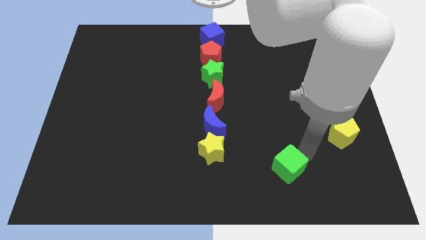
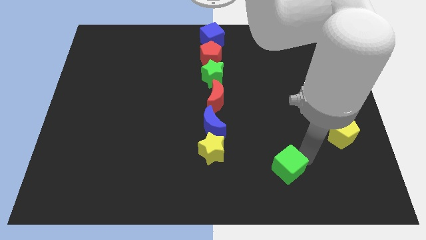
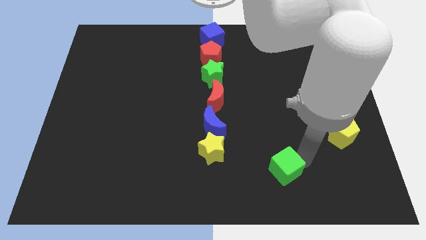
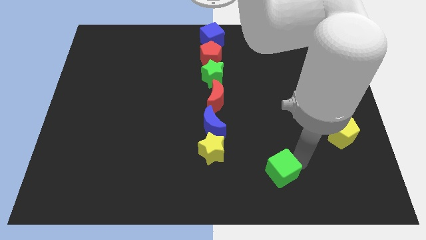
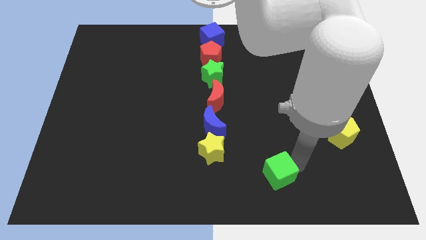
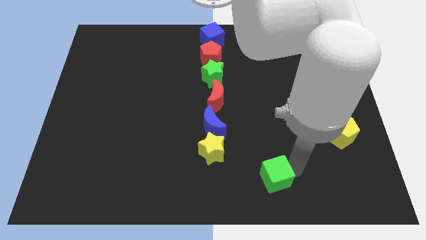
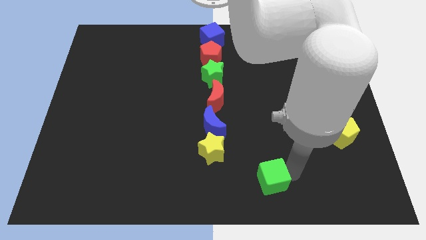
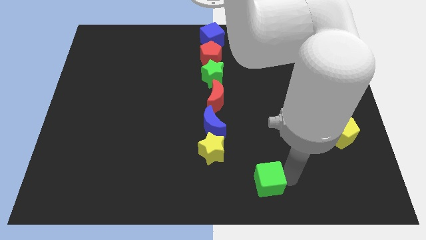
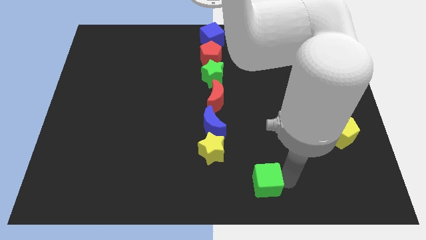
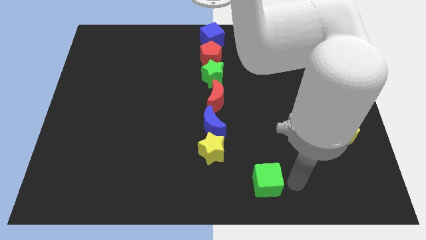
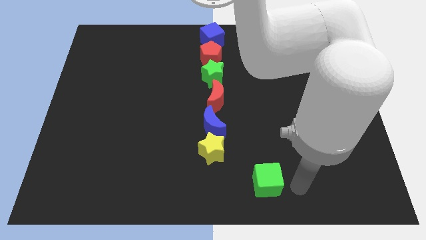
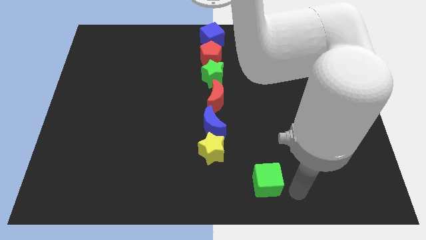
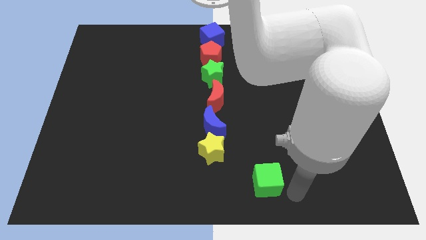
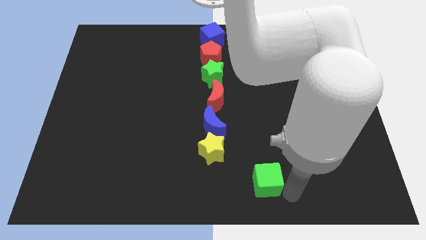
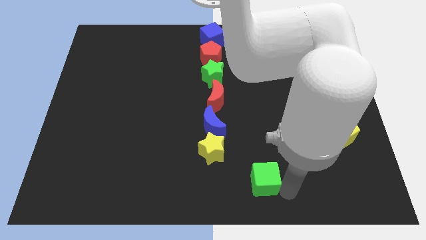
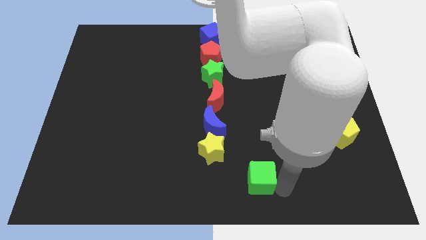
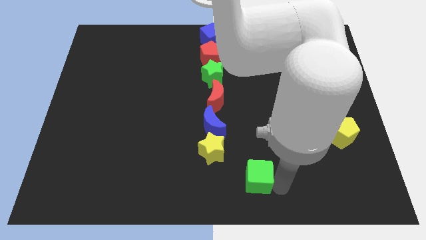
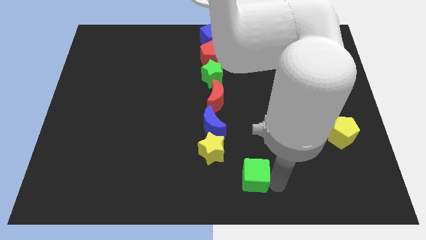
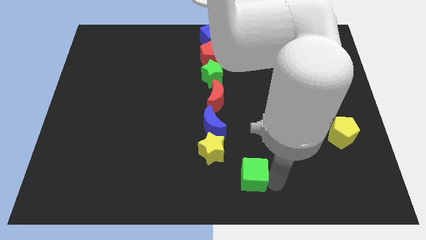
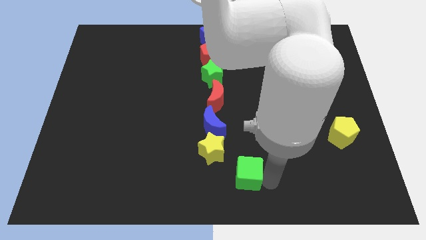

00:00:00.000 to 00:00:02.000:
push the green cube to the left

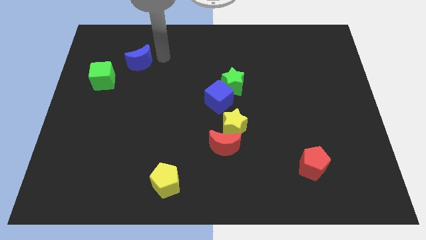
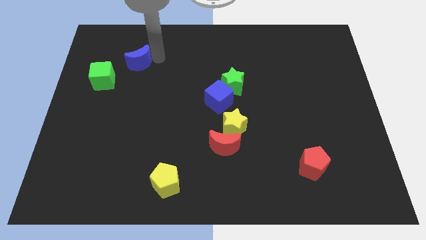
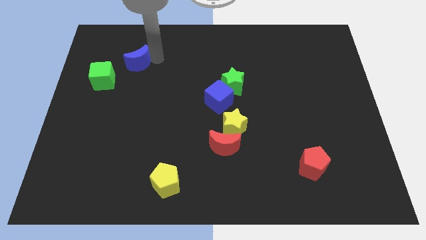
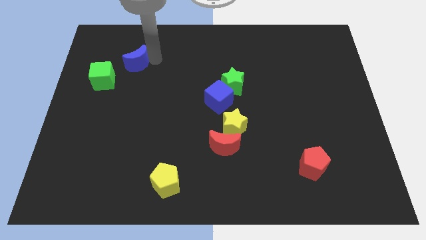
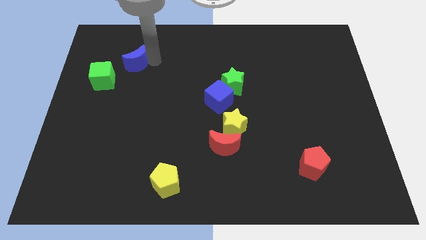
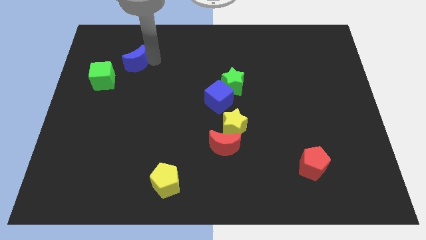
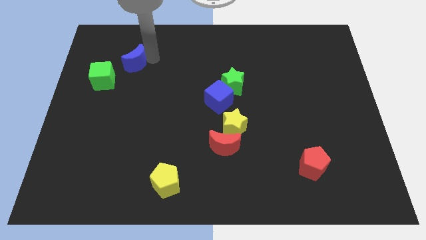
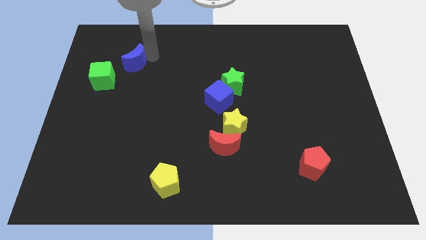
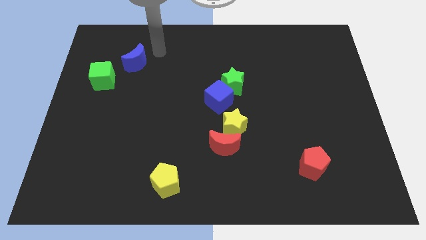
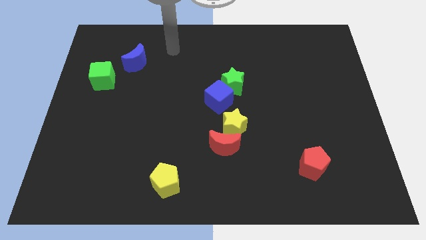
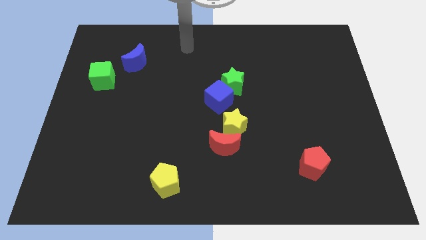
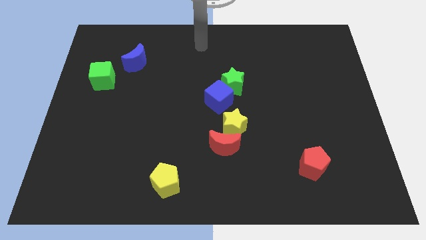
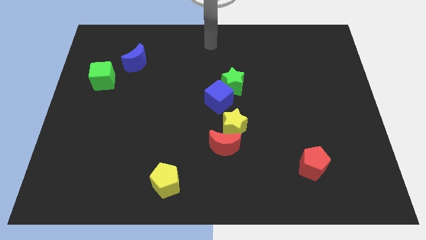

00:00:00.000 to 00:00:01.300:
move the arm away from the blue moon

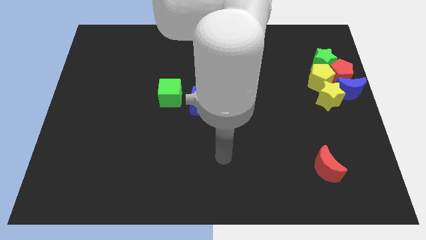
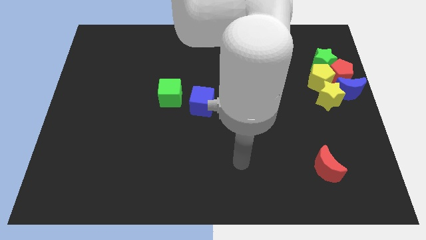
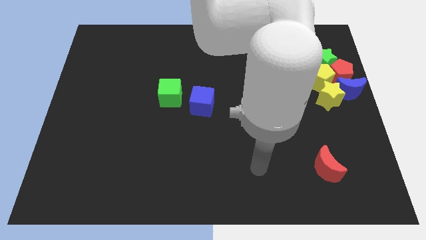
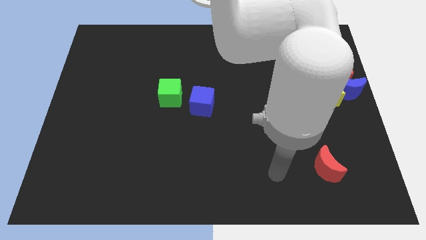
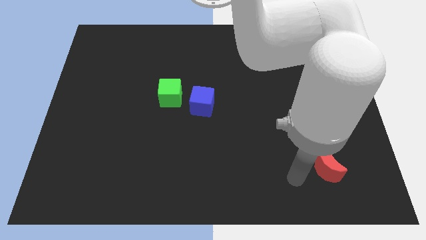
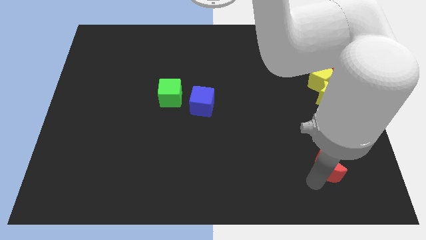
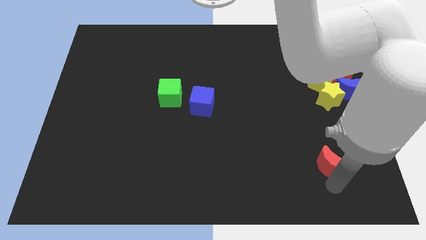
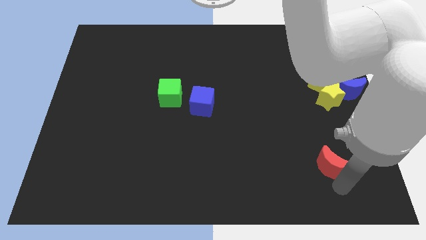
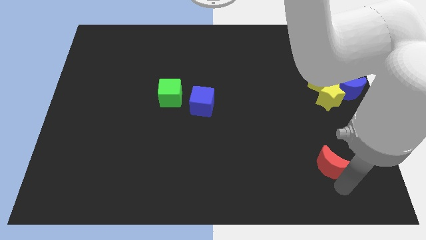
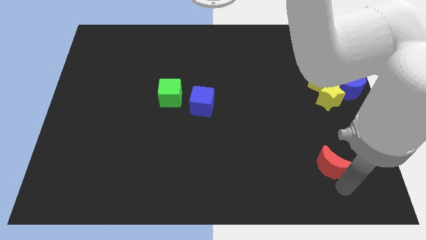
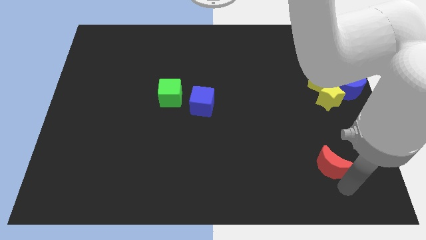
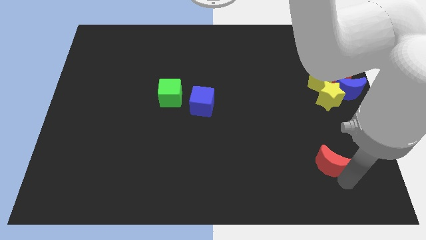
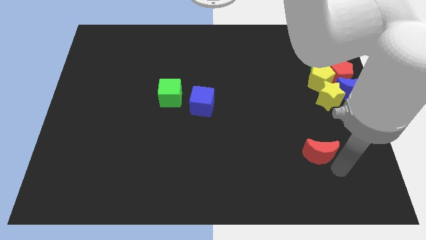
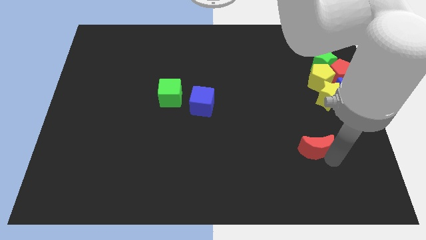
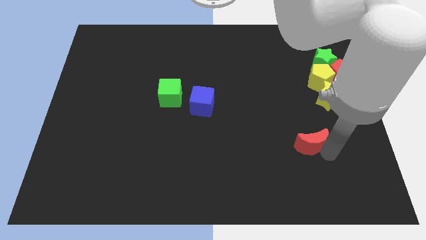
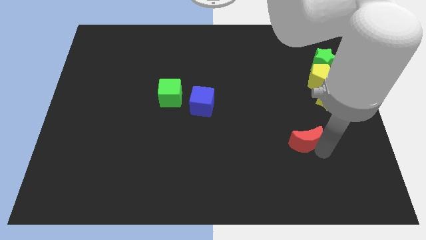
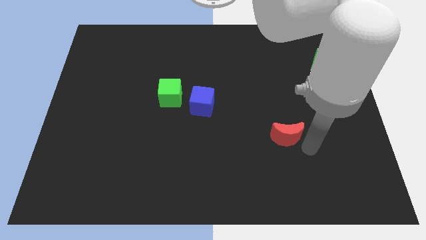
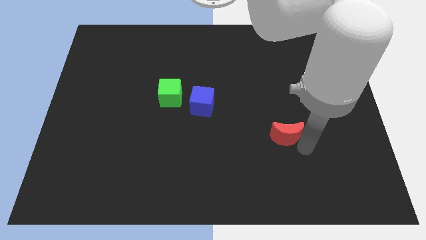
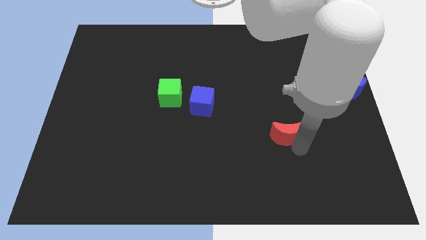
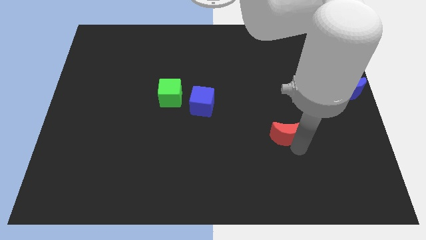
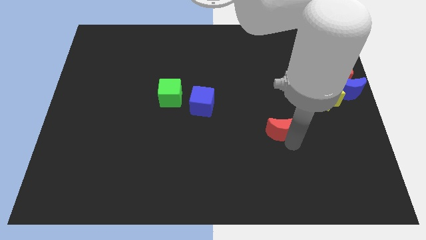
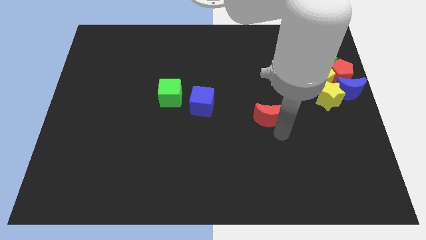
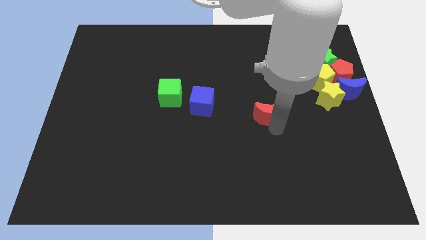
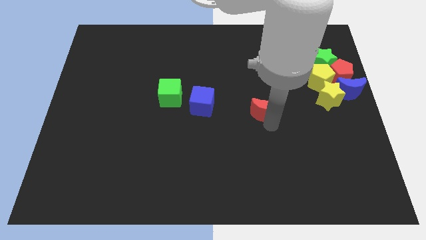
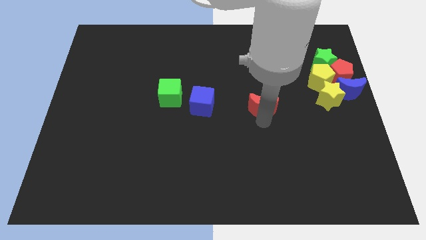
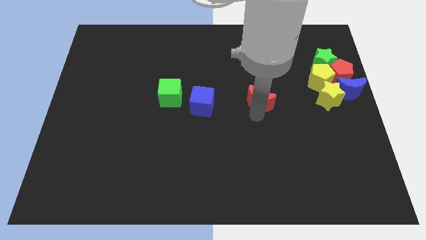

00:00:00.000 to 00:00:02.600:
move the red moon parallel to the left of the blue cube

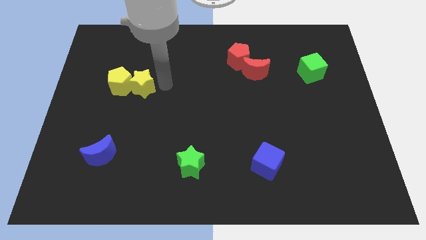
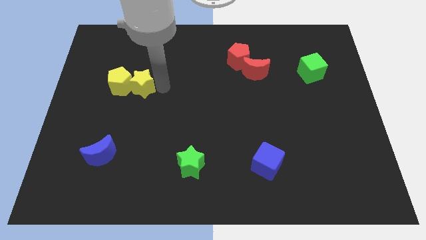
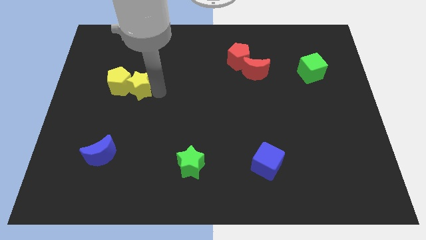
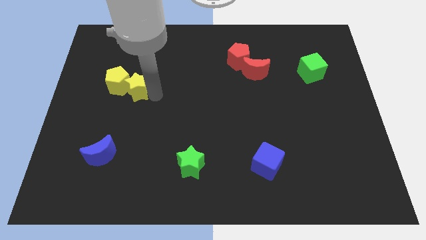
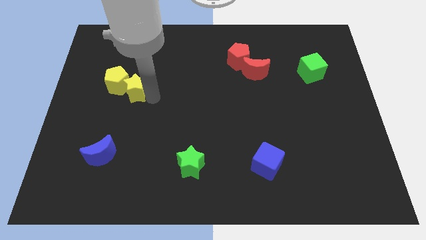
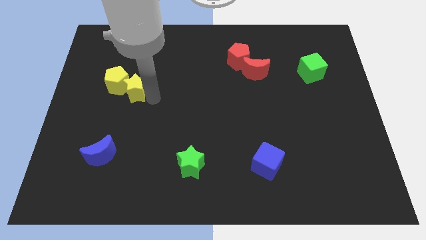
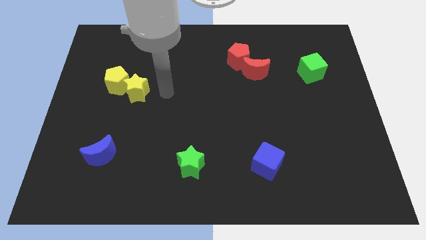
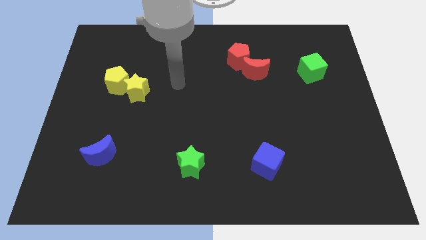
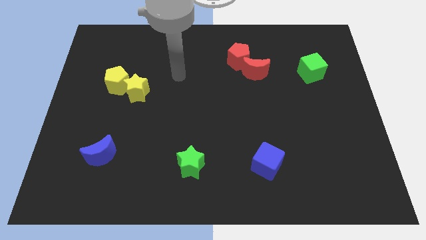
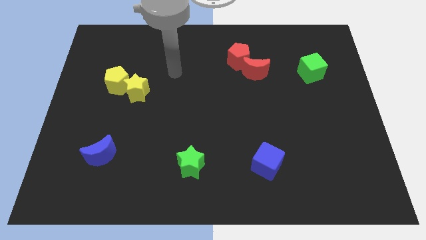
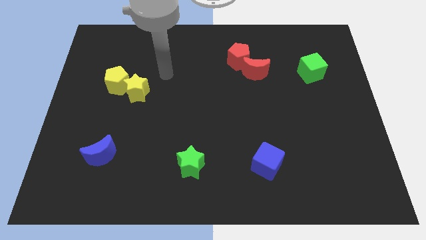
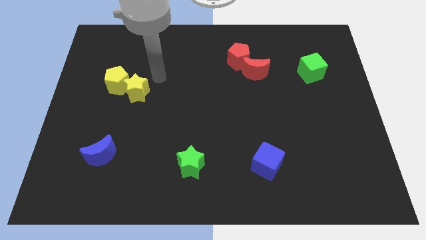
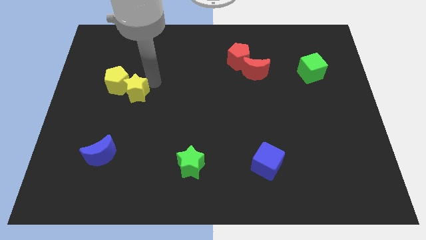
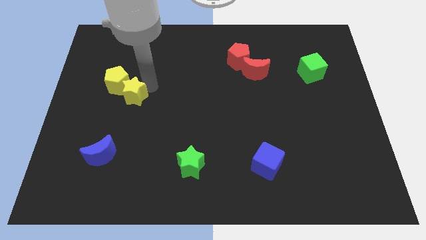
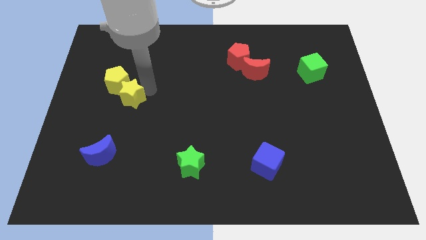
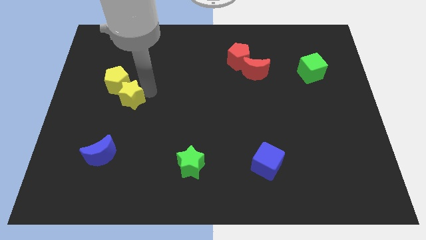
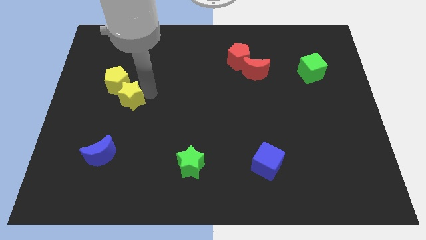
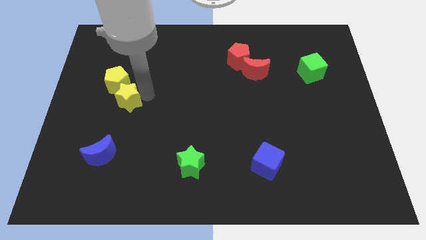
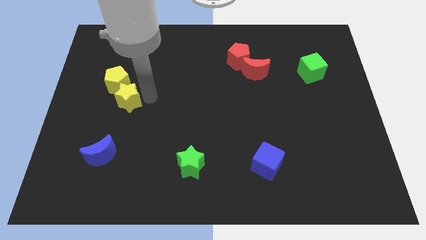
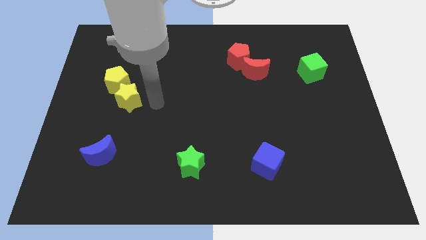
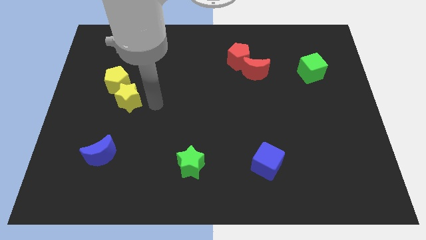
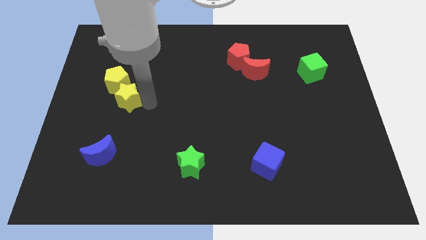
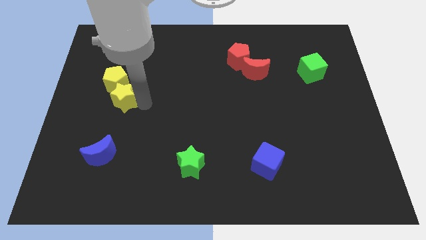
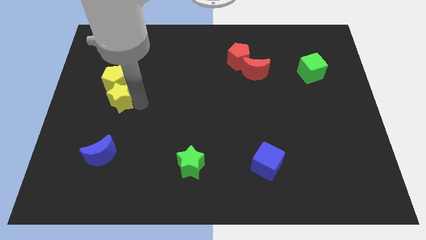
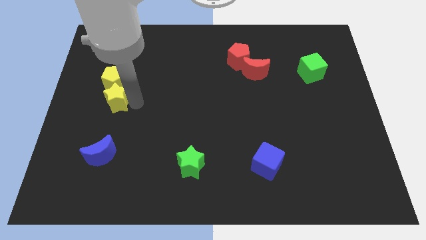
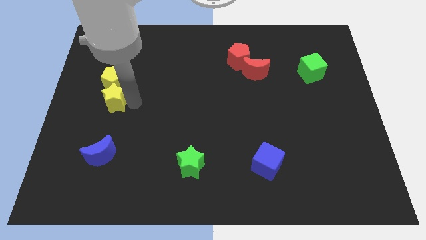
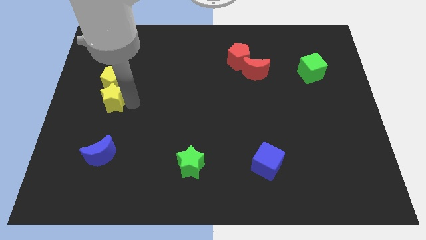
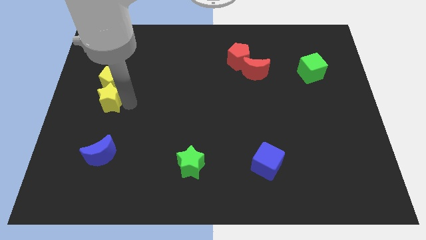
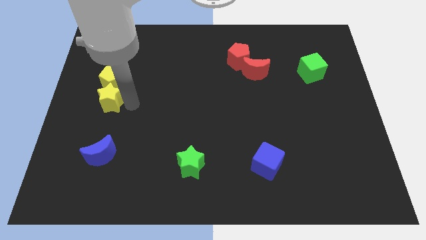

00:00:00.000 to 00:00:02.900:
place the yellow star down to the yellow pentagon

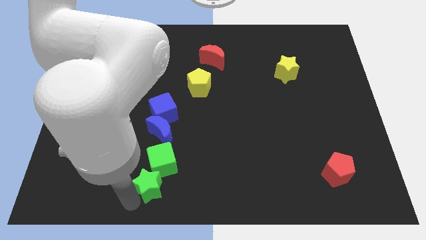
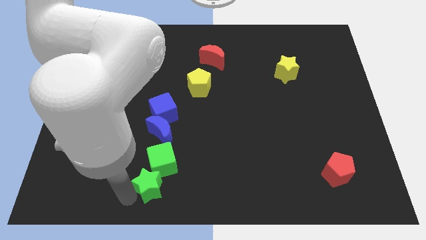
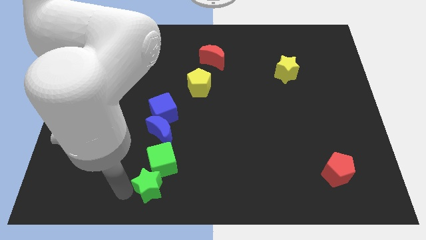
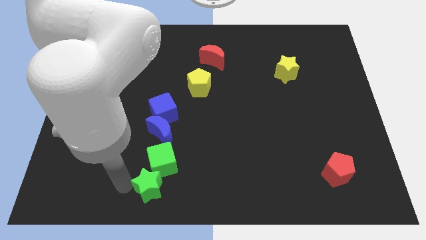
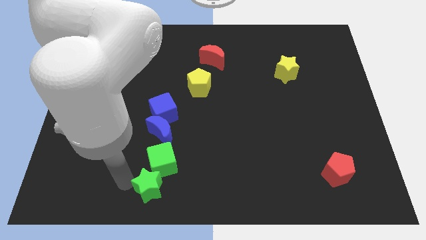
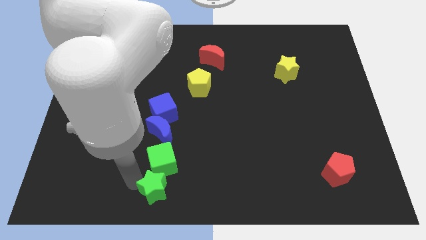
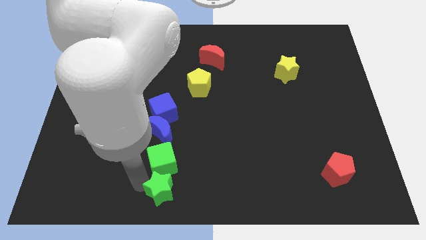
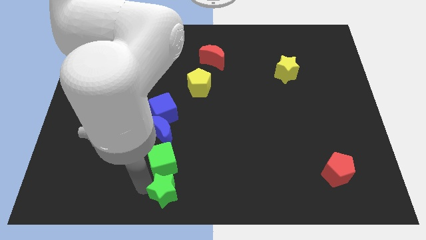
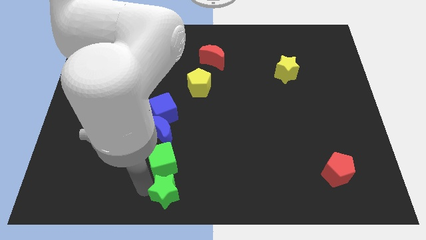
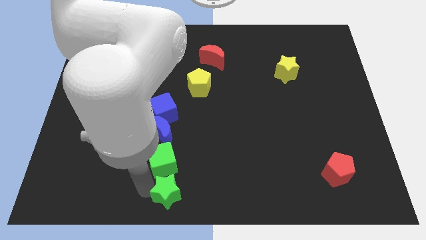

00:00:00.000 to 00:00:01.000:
place the green star below the green cube
